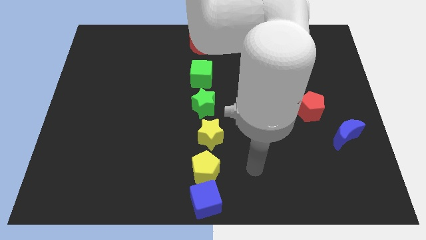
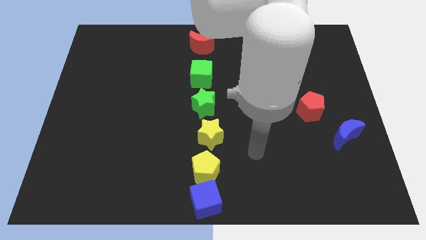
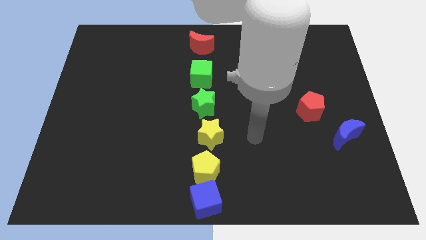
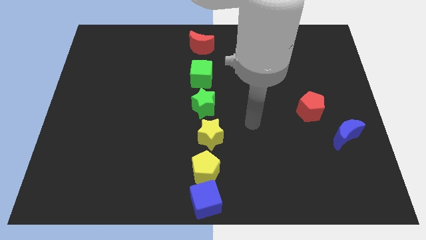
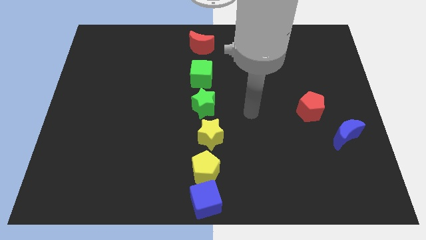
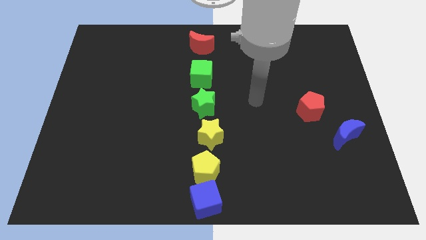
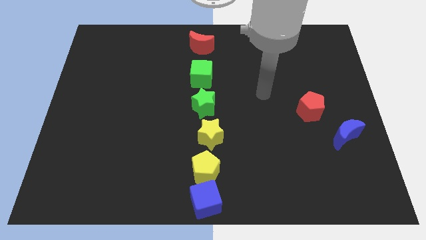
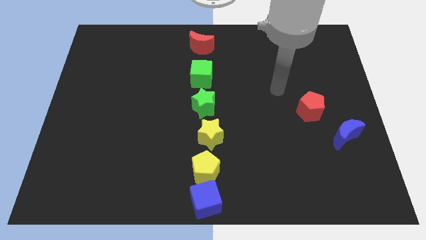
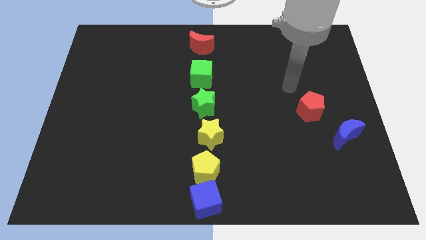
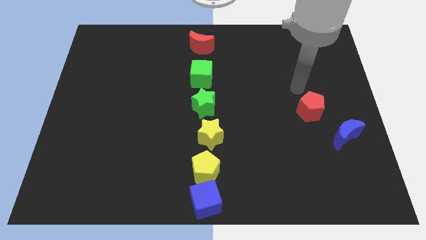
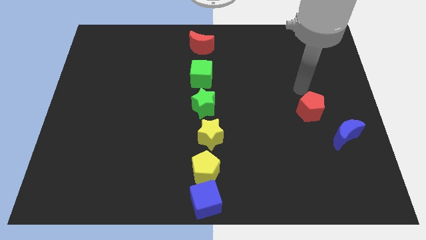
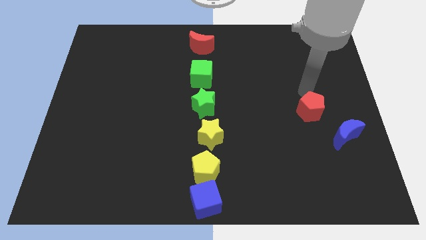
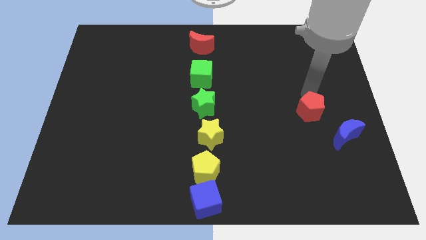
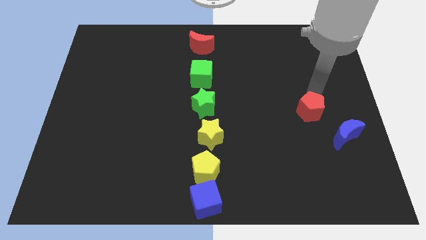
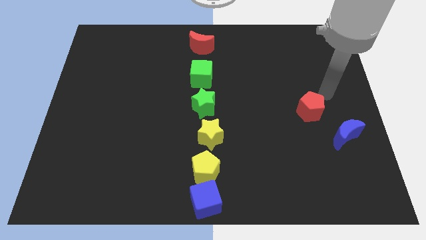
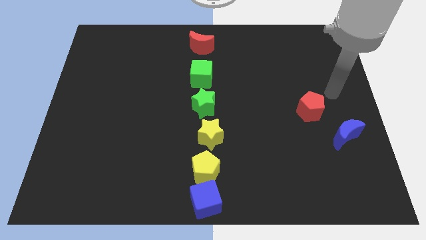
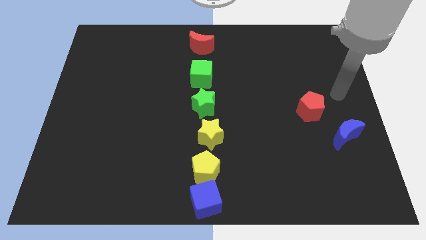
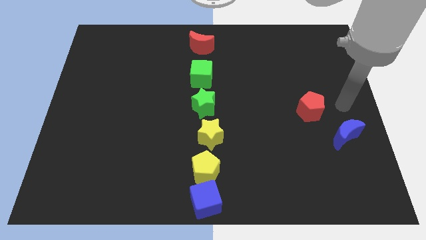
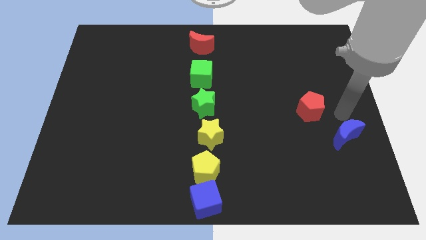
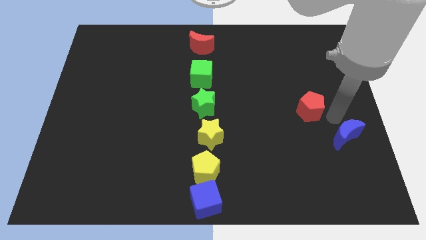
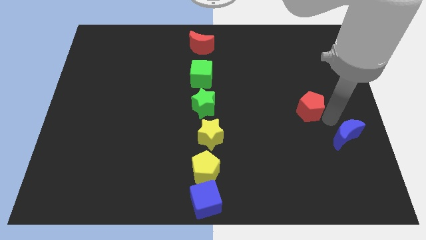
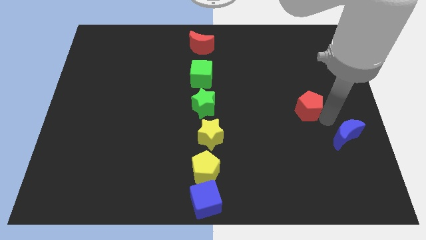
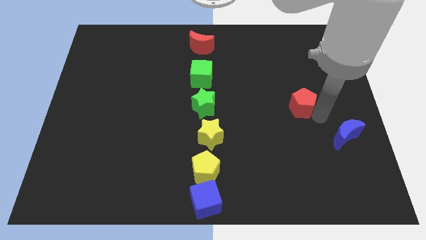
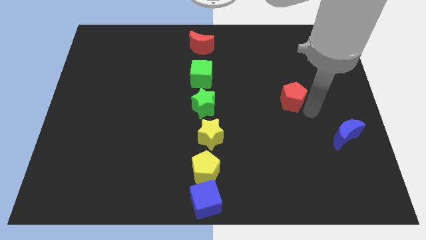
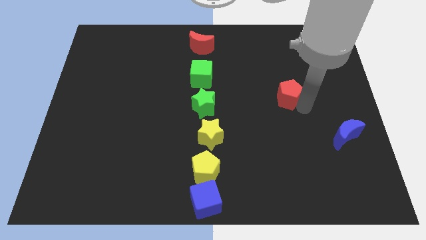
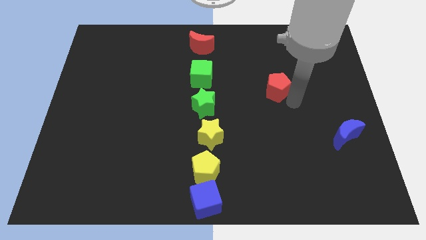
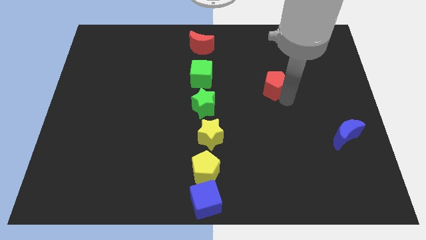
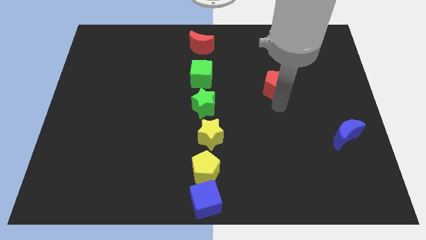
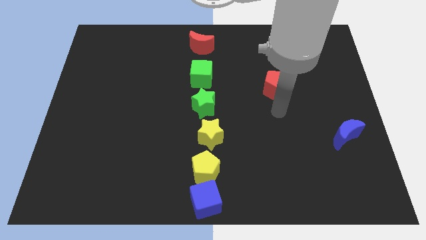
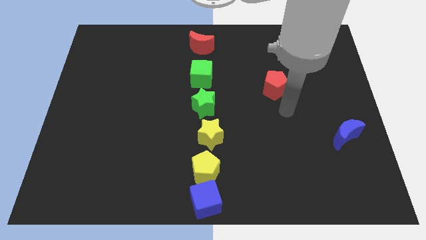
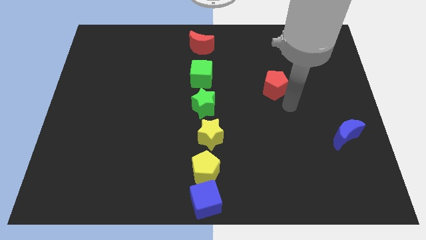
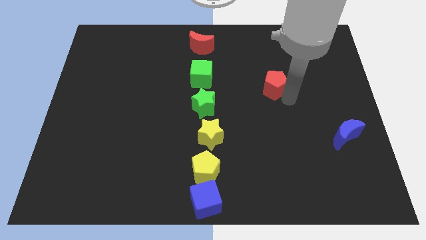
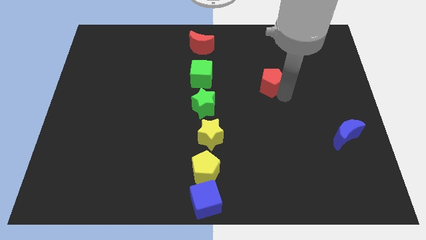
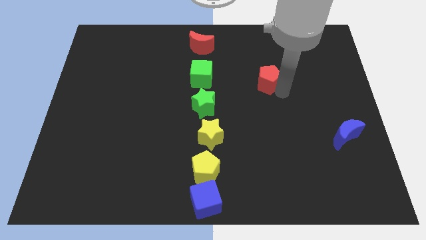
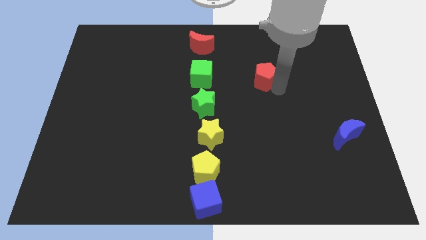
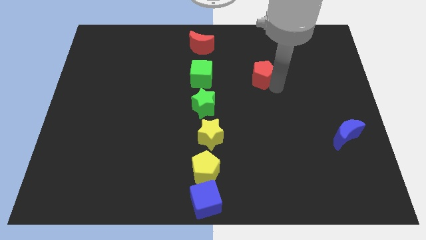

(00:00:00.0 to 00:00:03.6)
push the red pentagon to the top of the board

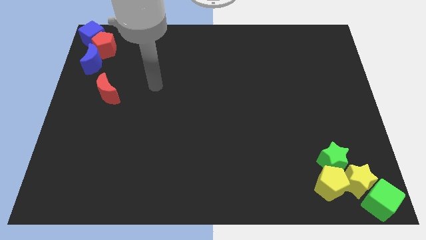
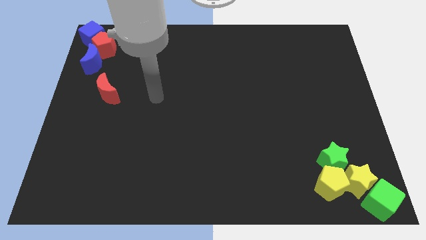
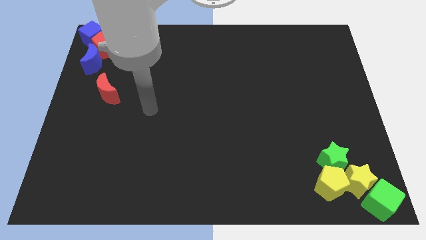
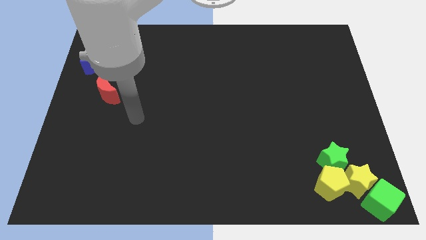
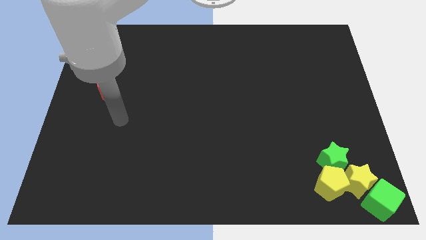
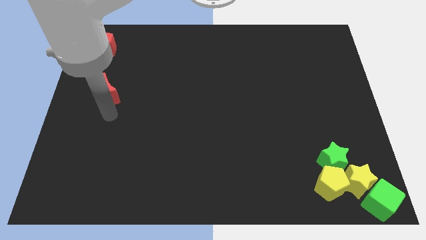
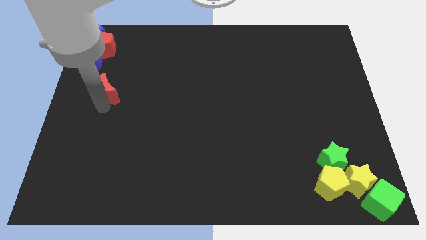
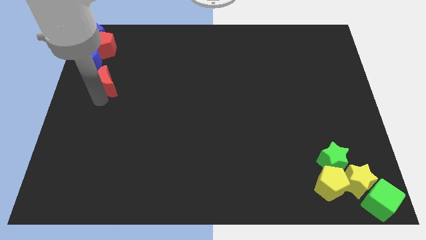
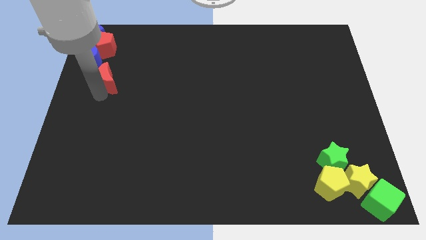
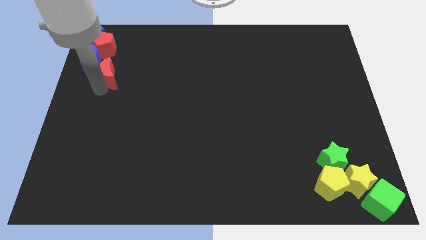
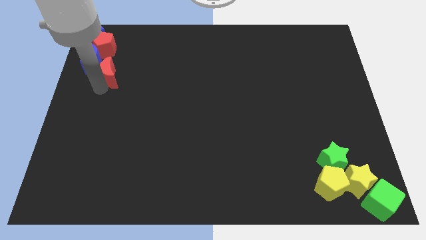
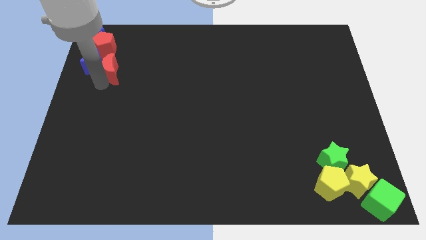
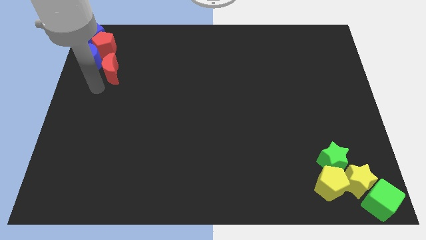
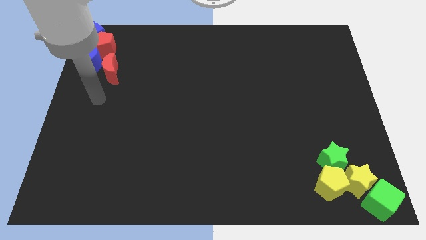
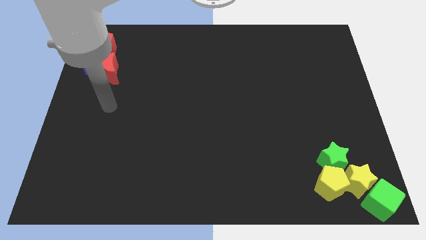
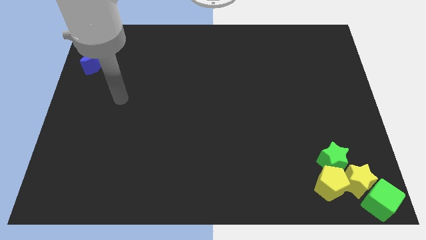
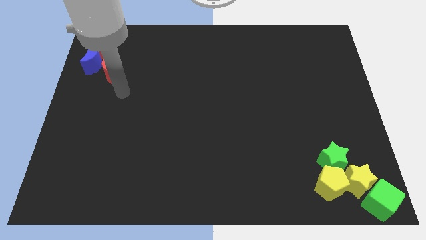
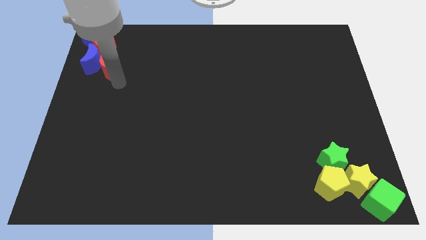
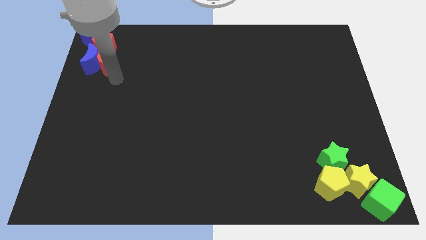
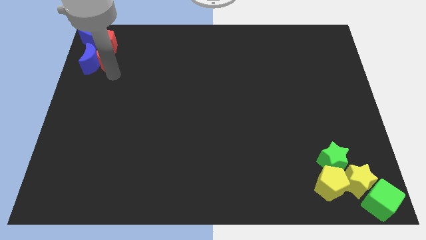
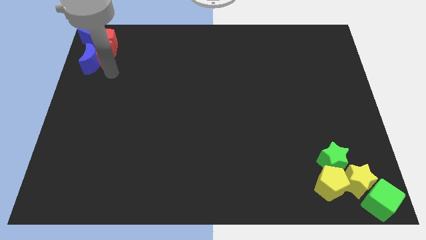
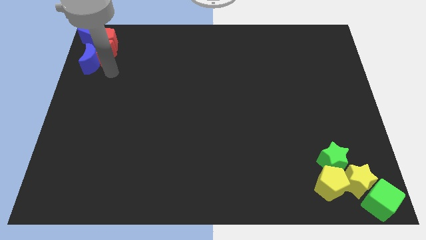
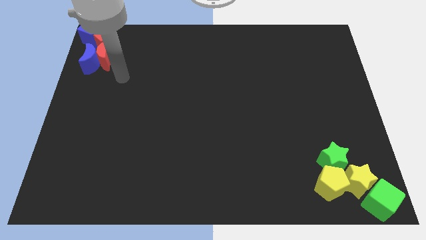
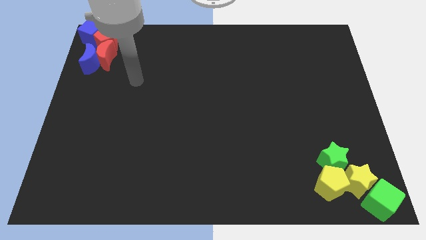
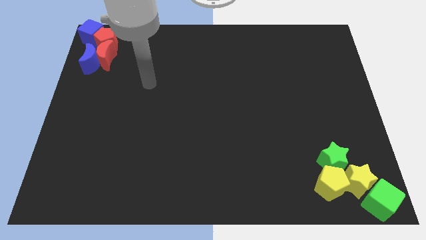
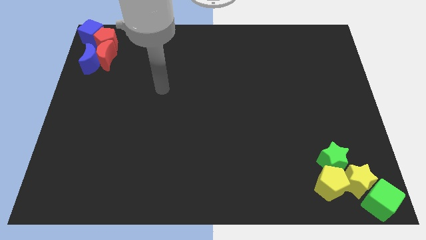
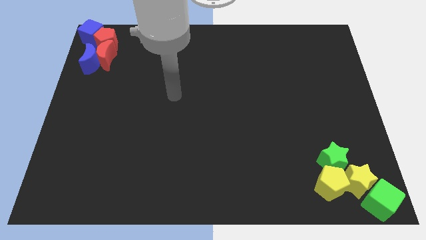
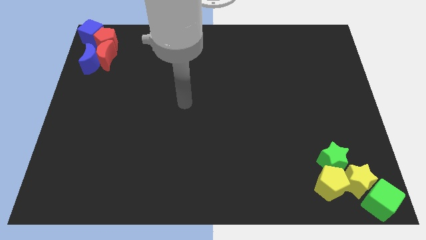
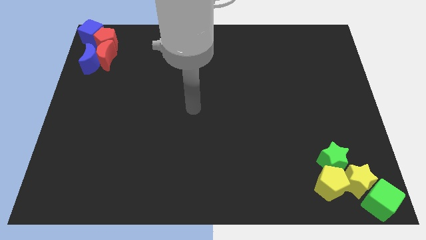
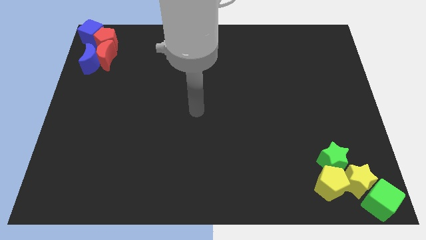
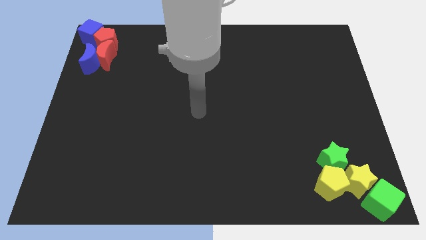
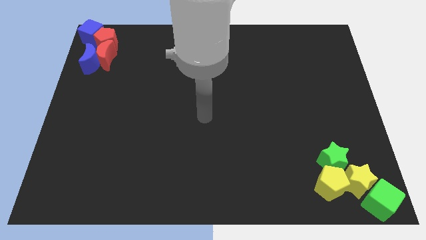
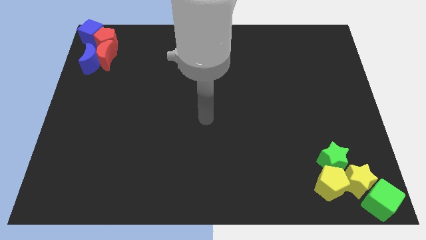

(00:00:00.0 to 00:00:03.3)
move the red crescent to the right of the blue crescent

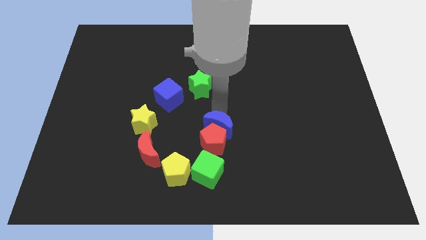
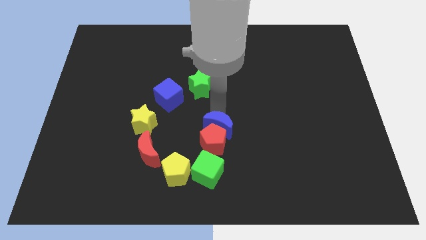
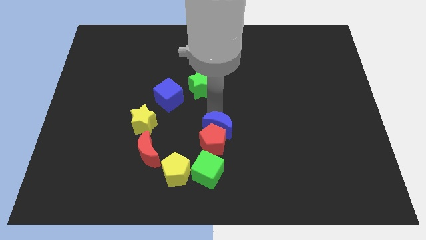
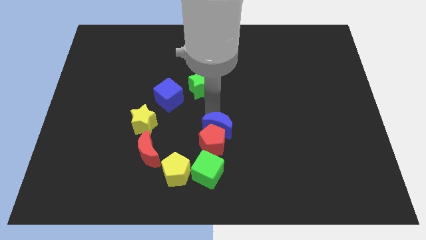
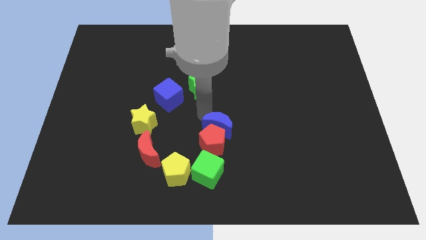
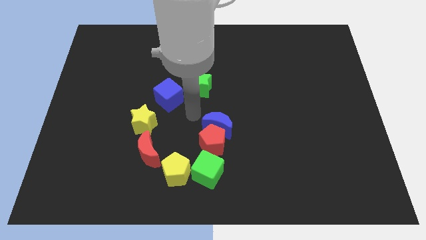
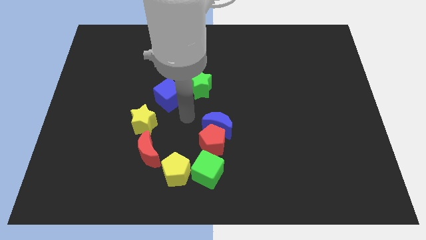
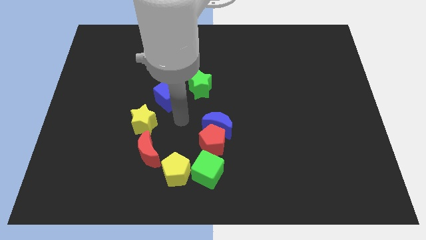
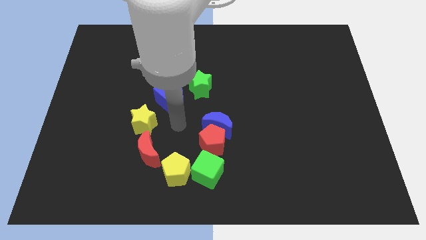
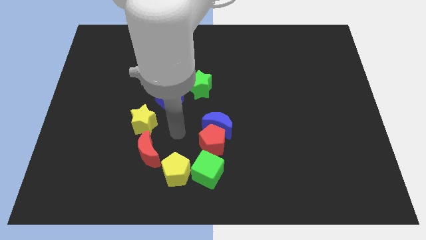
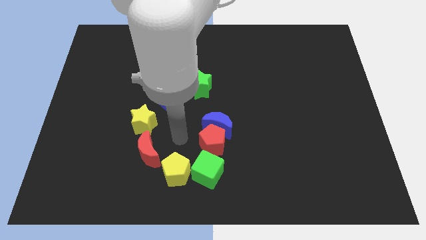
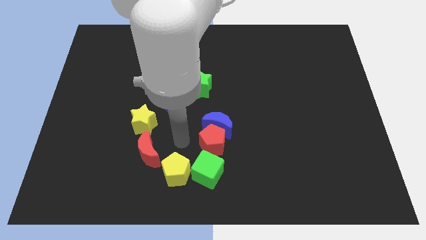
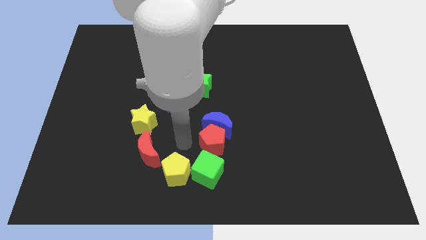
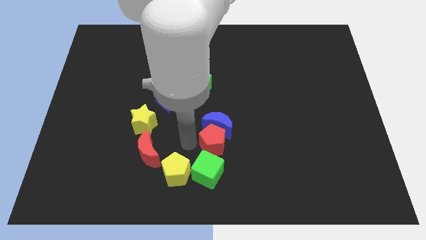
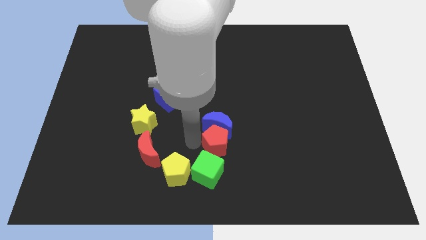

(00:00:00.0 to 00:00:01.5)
move the arm towards the left side of the red pentagon

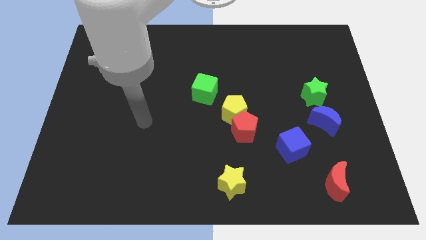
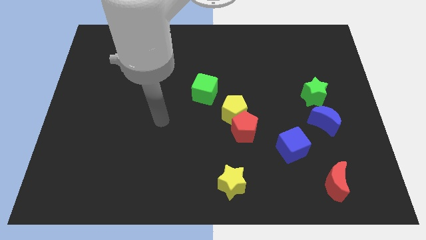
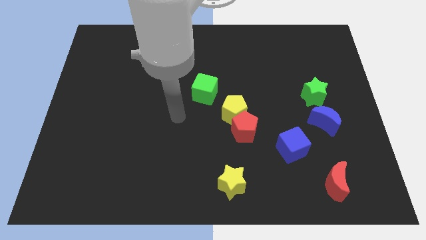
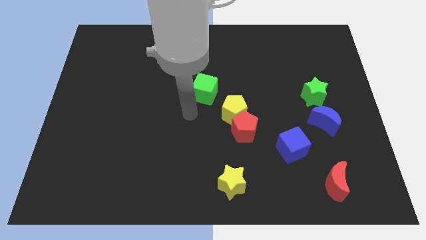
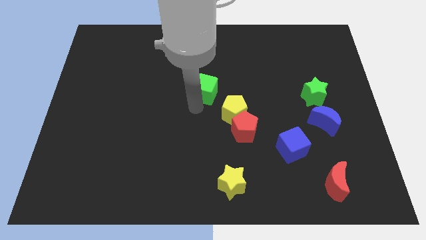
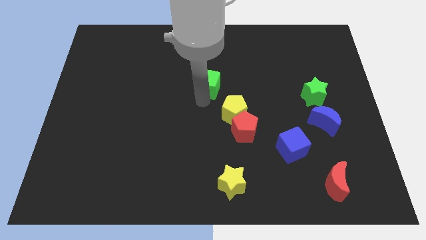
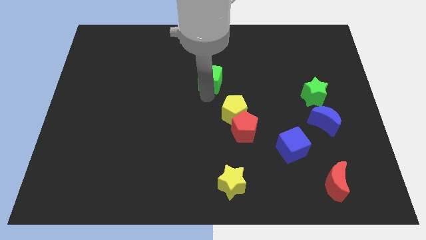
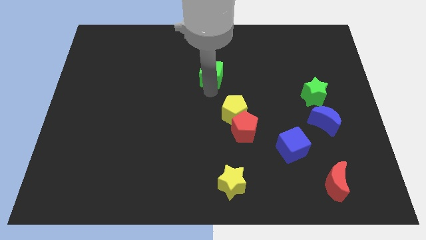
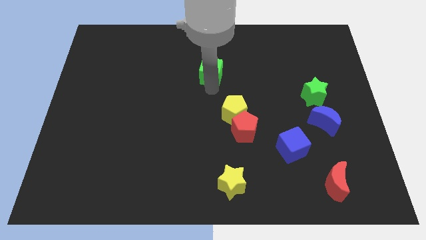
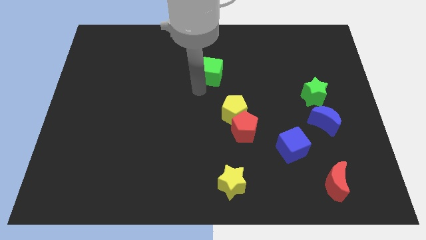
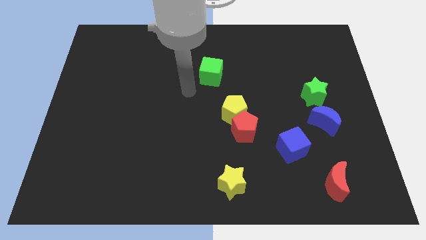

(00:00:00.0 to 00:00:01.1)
push the green cube towards the top side of the board
